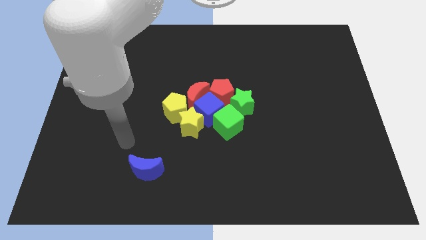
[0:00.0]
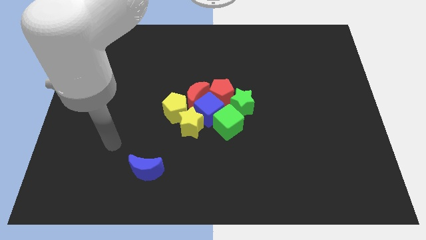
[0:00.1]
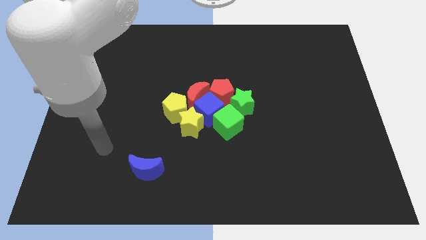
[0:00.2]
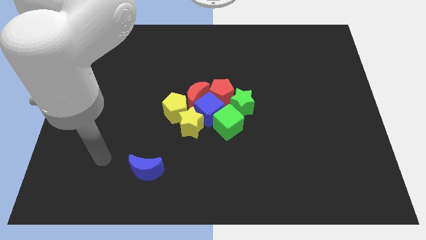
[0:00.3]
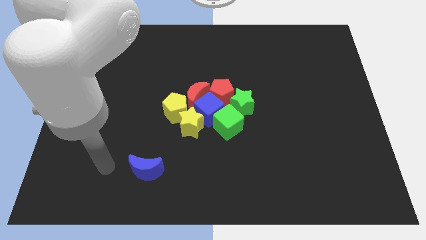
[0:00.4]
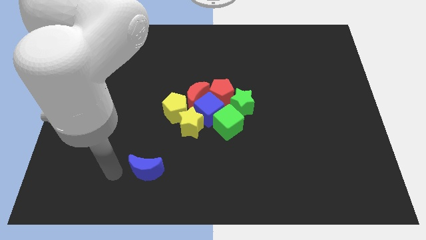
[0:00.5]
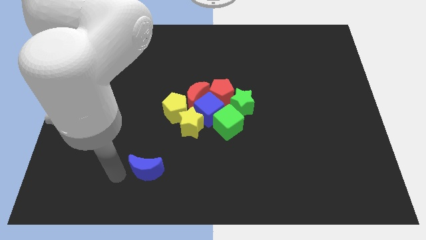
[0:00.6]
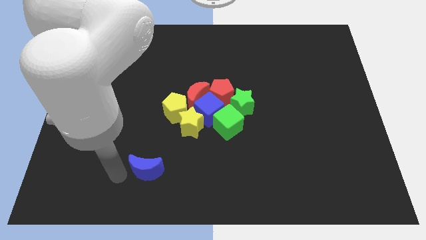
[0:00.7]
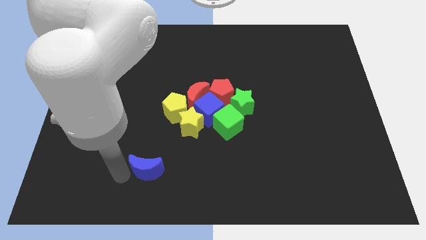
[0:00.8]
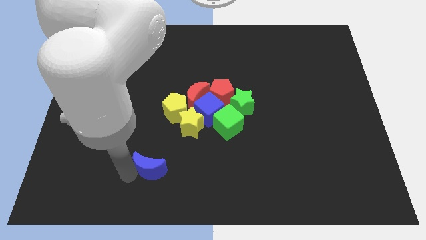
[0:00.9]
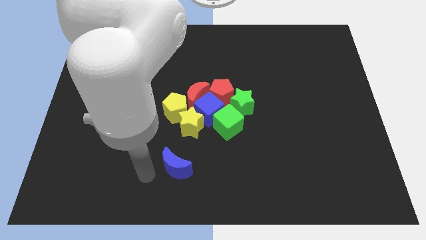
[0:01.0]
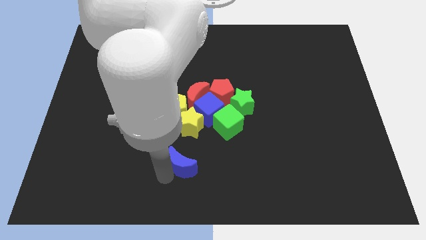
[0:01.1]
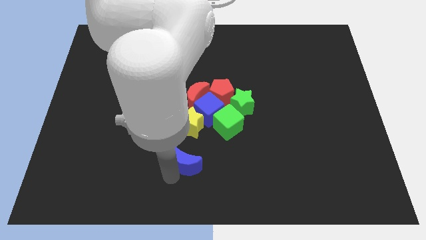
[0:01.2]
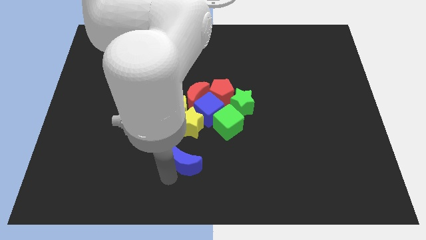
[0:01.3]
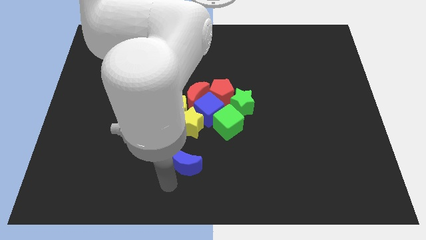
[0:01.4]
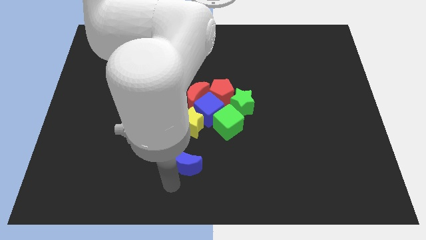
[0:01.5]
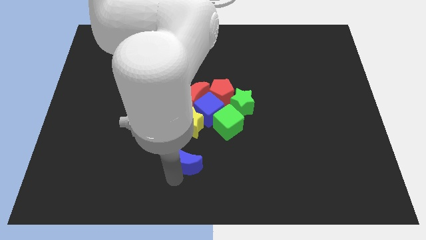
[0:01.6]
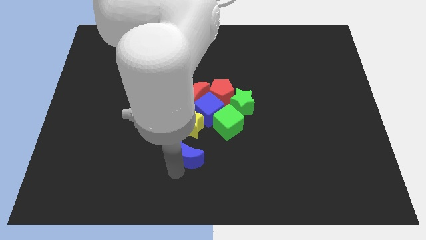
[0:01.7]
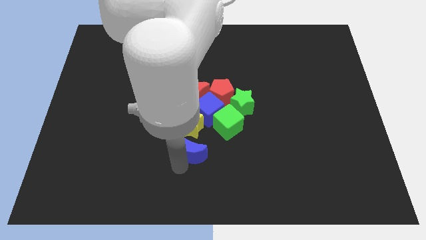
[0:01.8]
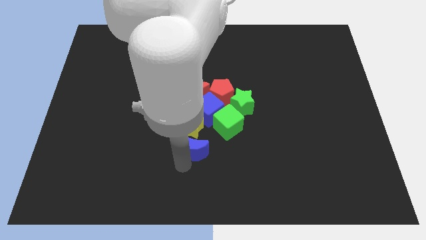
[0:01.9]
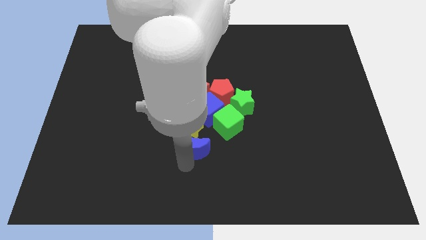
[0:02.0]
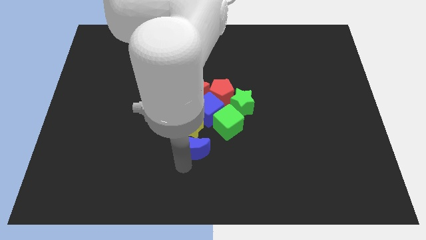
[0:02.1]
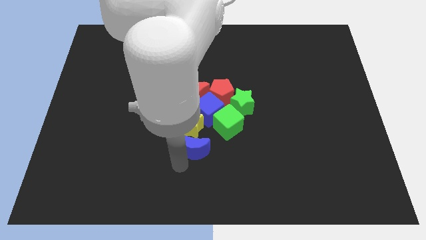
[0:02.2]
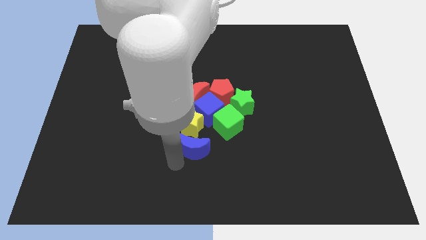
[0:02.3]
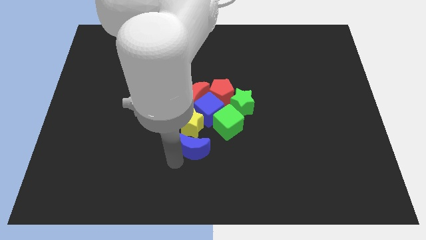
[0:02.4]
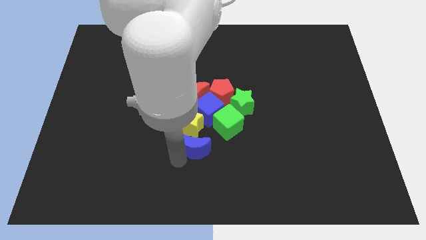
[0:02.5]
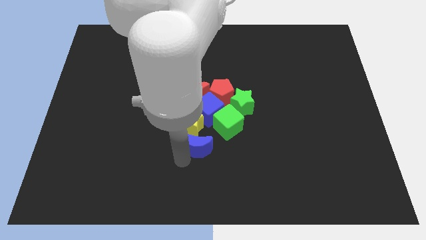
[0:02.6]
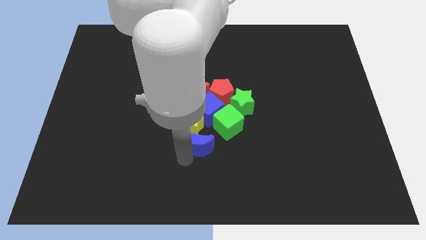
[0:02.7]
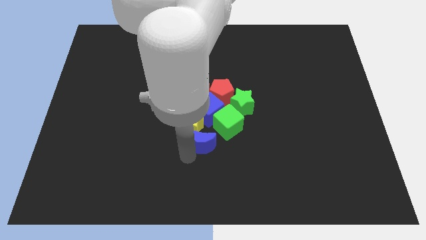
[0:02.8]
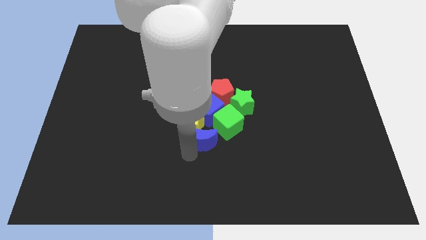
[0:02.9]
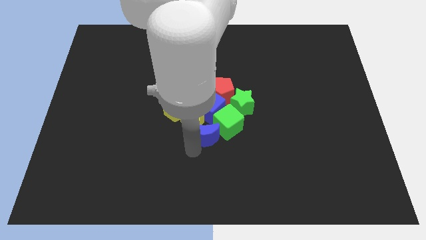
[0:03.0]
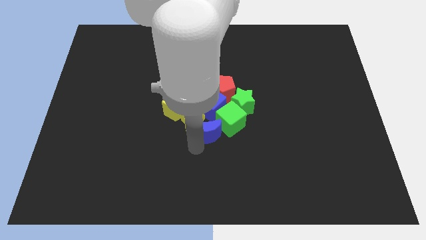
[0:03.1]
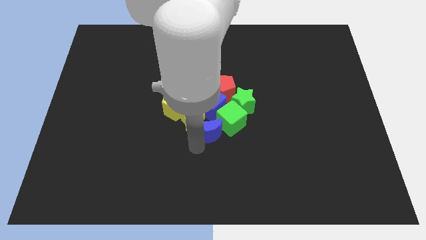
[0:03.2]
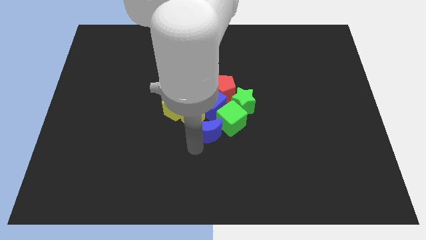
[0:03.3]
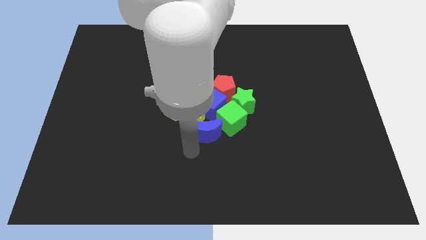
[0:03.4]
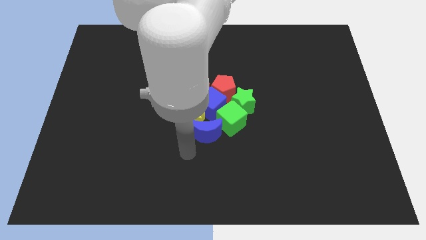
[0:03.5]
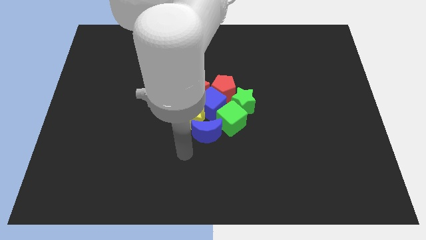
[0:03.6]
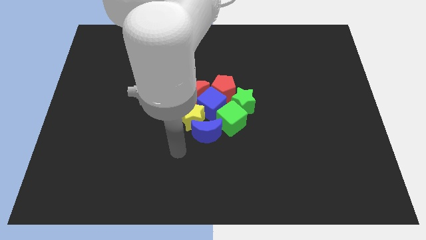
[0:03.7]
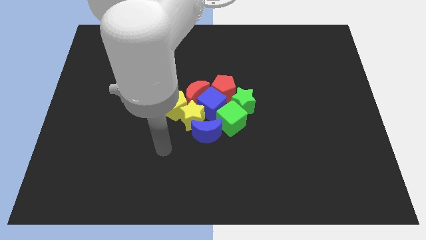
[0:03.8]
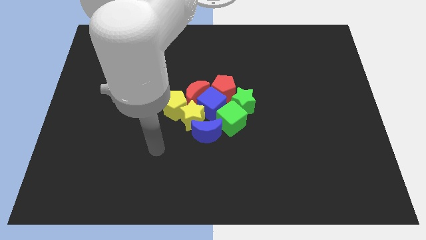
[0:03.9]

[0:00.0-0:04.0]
push the blue cube into the group of blocks

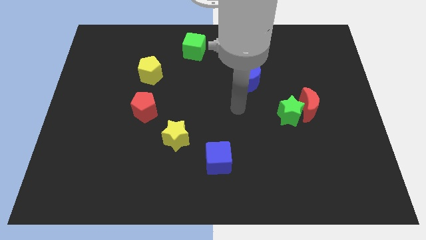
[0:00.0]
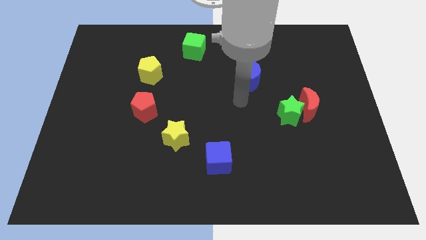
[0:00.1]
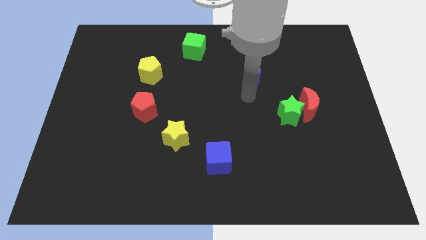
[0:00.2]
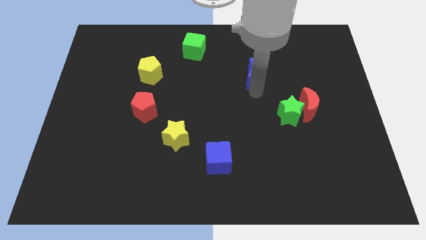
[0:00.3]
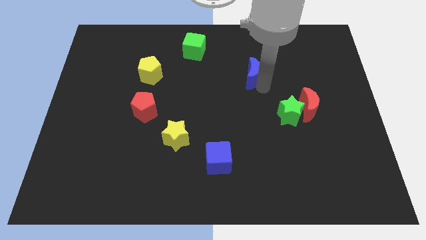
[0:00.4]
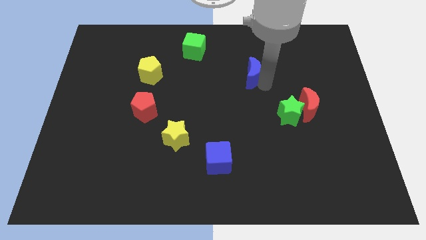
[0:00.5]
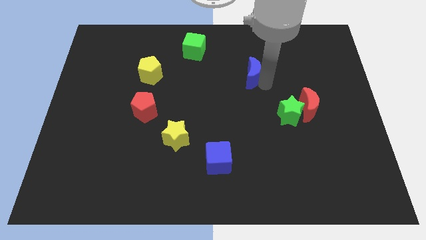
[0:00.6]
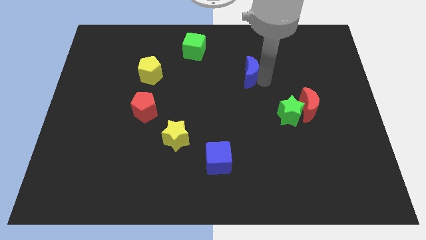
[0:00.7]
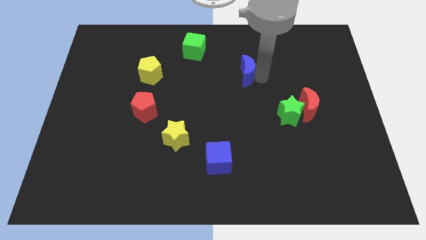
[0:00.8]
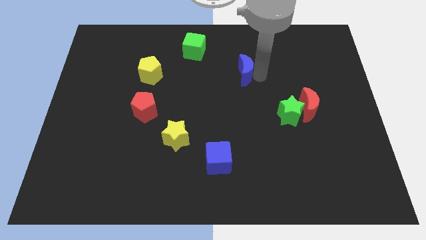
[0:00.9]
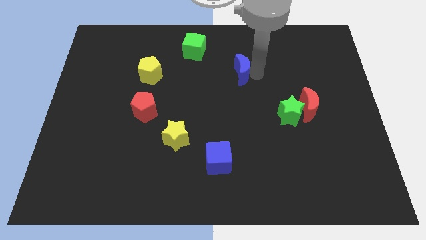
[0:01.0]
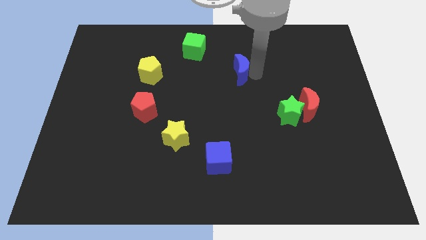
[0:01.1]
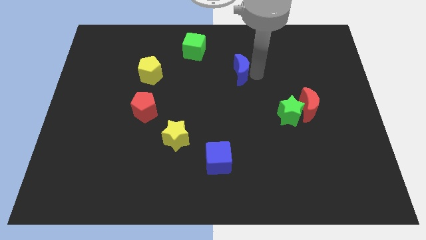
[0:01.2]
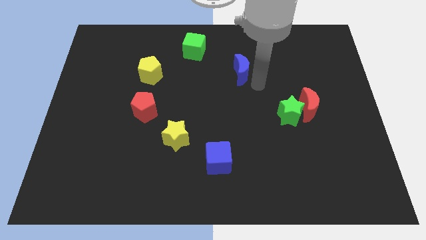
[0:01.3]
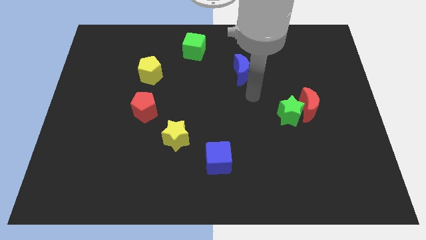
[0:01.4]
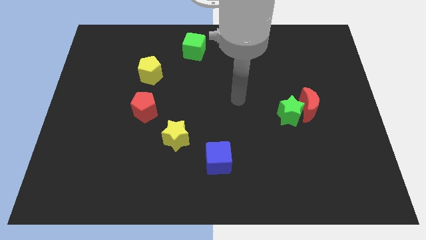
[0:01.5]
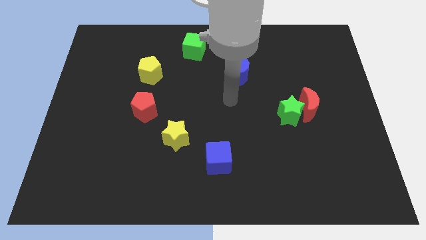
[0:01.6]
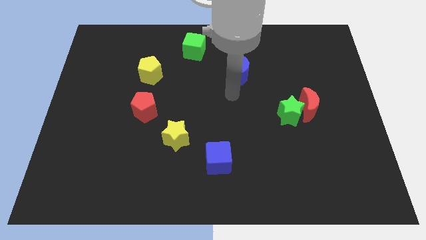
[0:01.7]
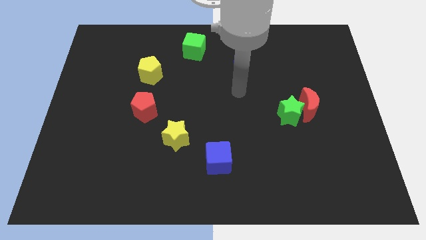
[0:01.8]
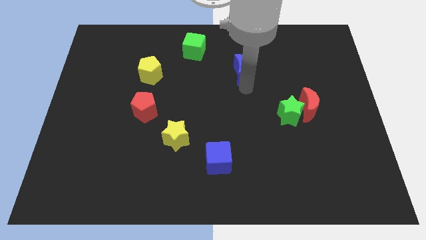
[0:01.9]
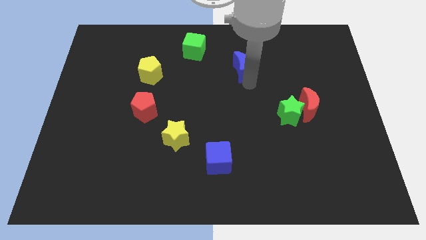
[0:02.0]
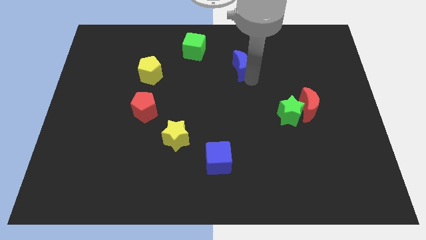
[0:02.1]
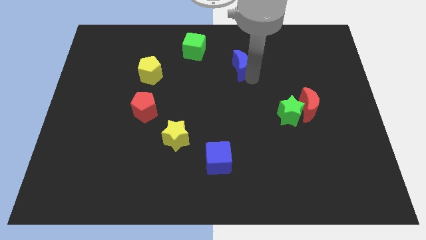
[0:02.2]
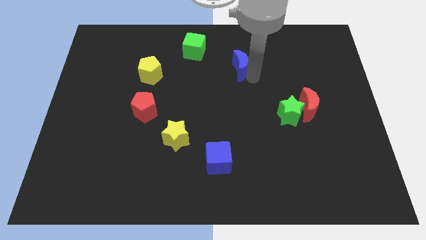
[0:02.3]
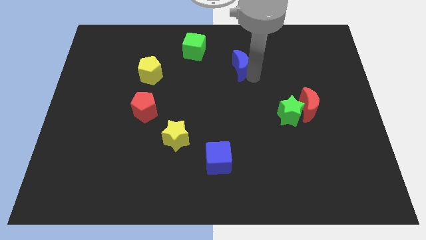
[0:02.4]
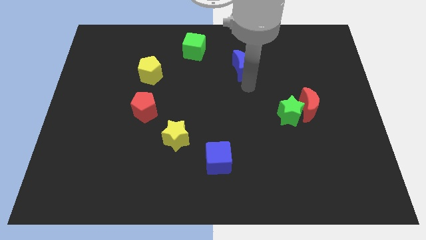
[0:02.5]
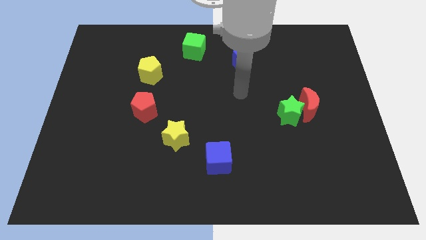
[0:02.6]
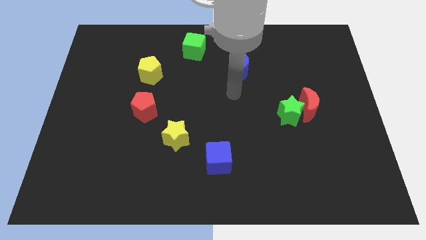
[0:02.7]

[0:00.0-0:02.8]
place the blue moon in between the green cube and the green star diagonally

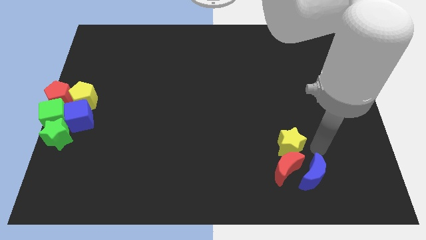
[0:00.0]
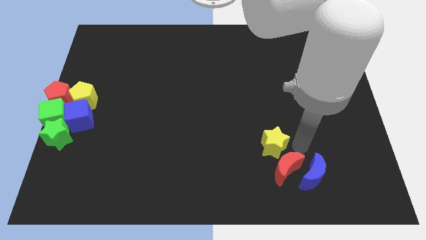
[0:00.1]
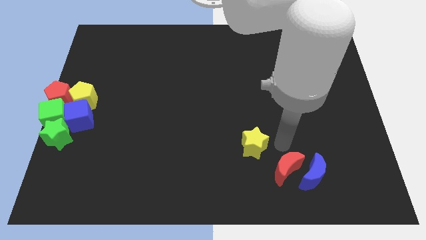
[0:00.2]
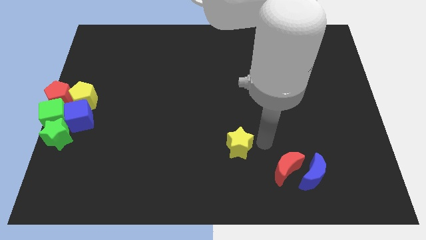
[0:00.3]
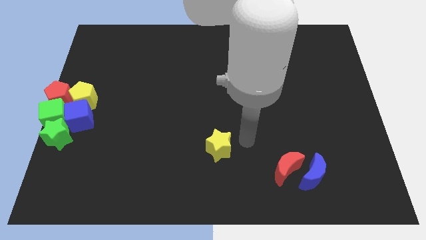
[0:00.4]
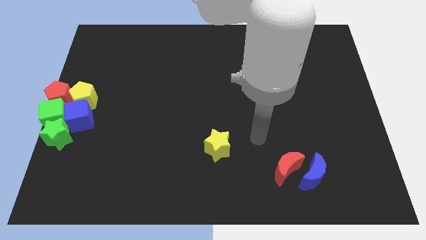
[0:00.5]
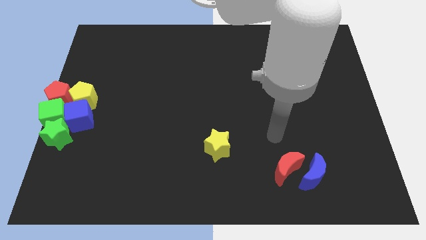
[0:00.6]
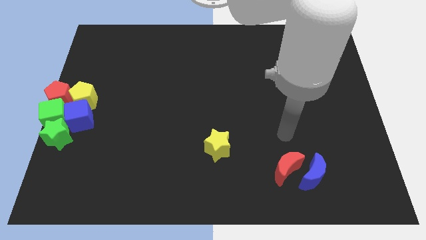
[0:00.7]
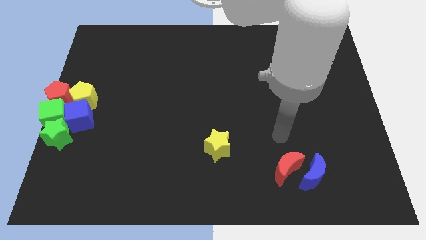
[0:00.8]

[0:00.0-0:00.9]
move the yellow star towards the left

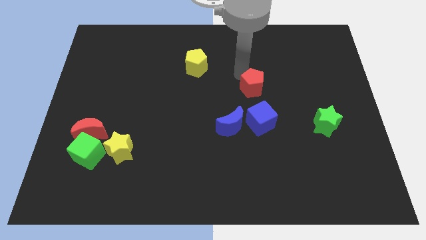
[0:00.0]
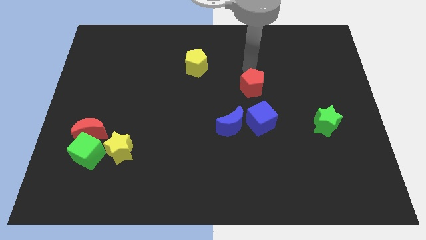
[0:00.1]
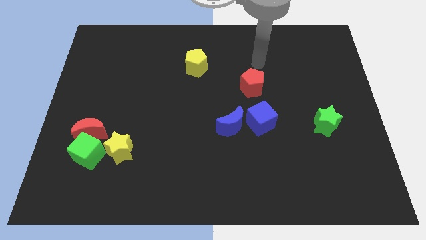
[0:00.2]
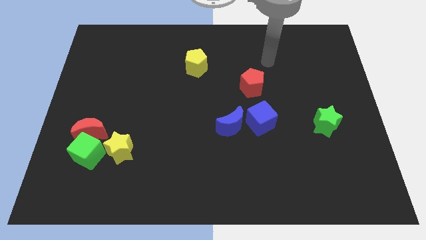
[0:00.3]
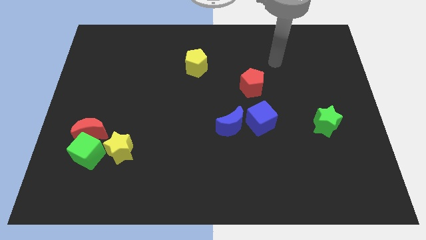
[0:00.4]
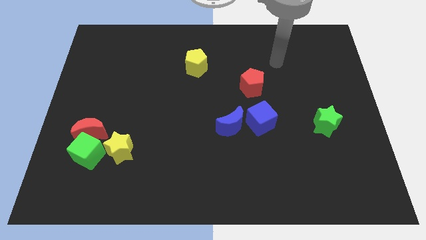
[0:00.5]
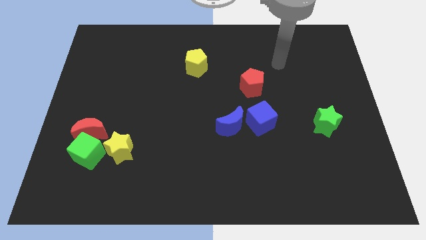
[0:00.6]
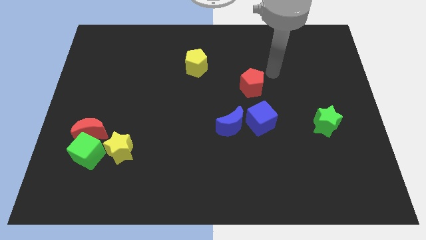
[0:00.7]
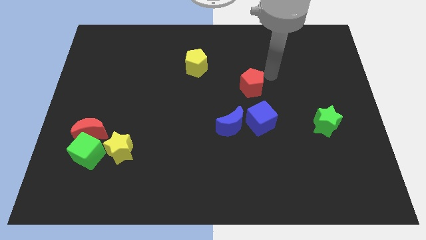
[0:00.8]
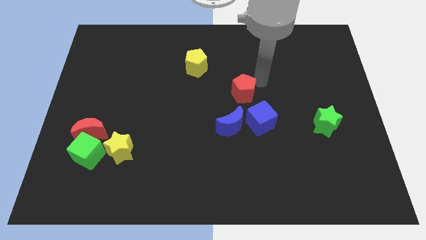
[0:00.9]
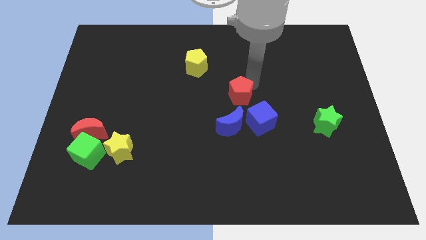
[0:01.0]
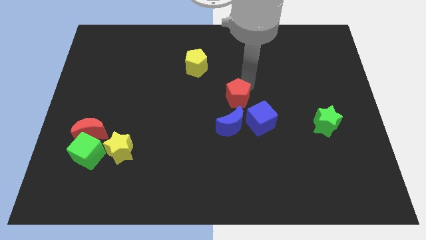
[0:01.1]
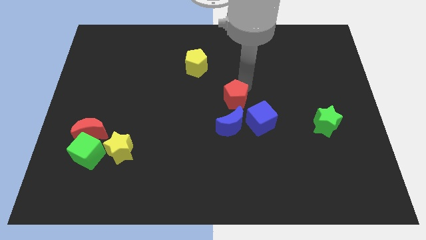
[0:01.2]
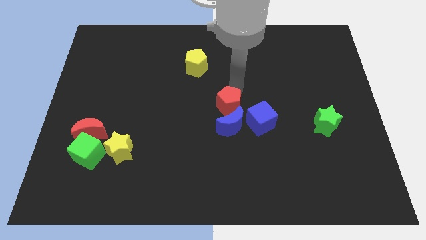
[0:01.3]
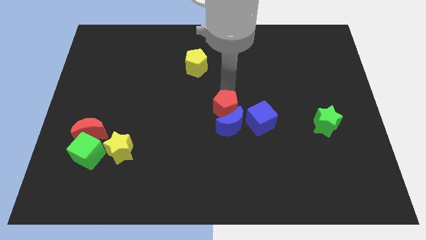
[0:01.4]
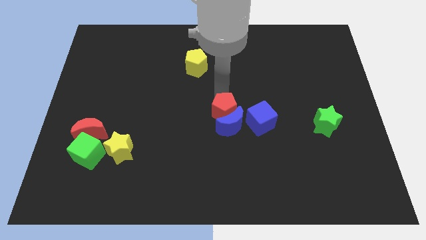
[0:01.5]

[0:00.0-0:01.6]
place the red pentagon above the blue crescent
